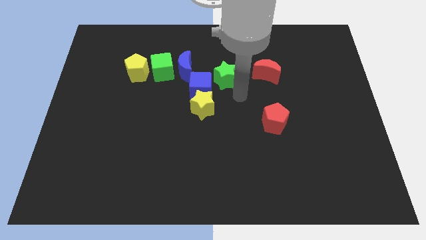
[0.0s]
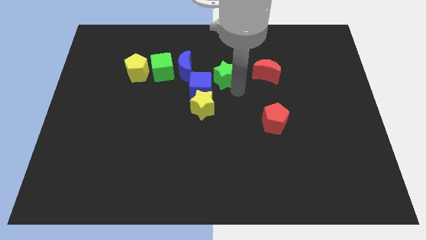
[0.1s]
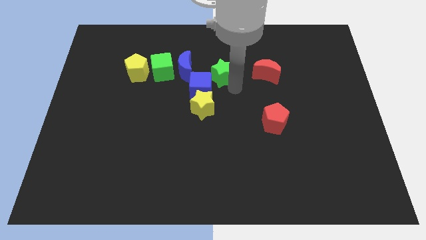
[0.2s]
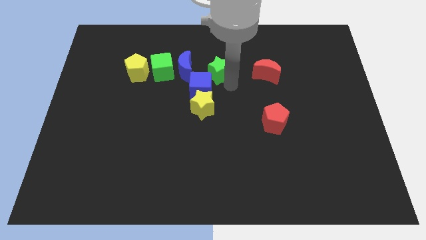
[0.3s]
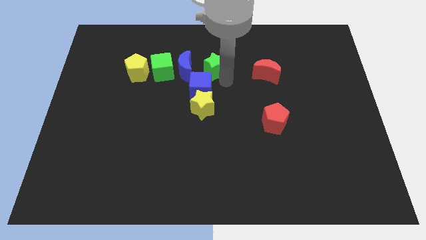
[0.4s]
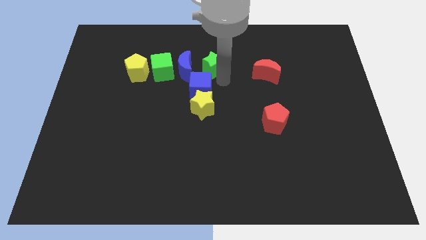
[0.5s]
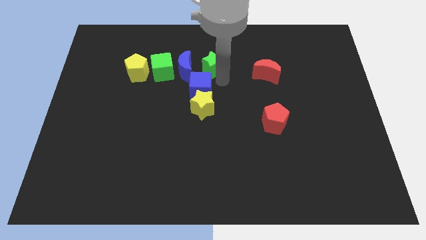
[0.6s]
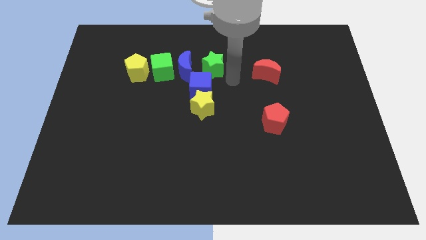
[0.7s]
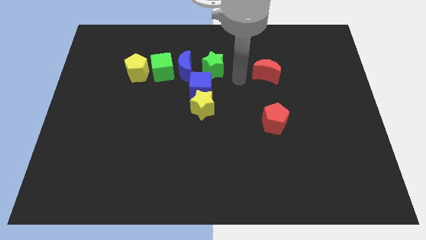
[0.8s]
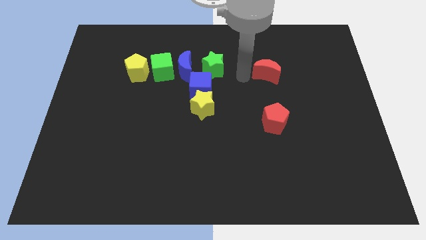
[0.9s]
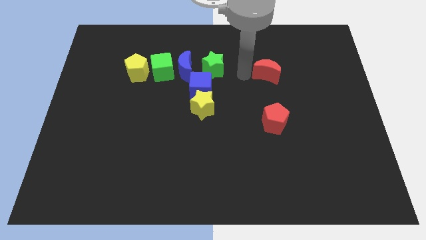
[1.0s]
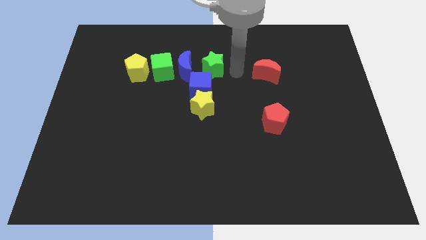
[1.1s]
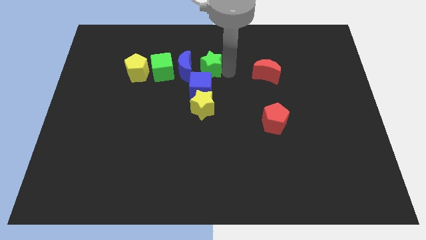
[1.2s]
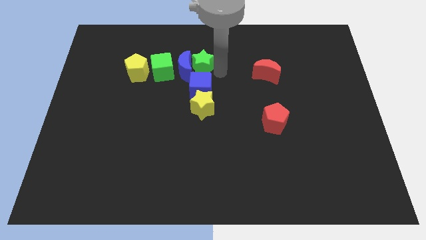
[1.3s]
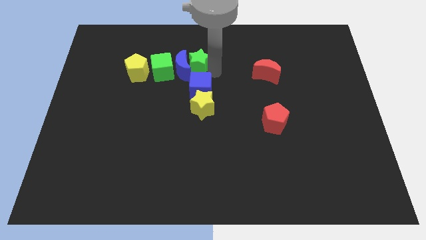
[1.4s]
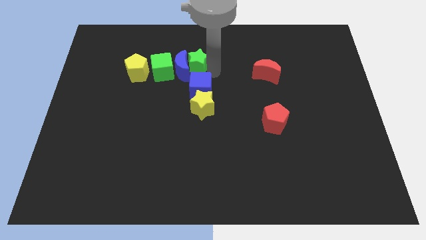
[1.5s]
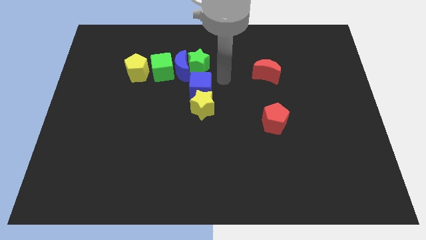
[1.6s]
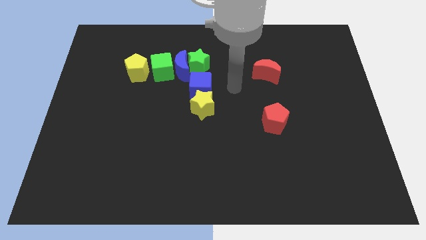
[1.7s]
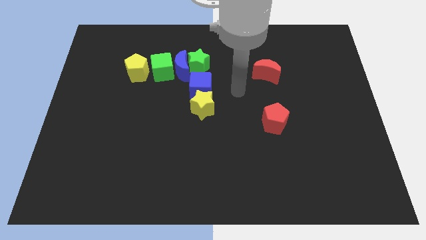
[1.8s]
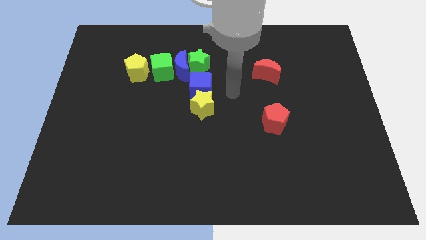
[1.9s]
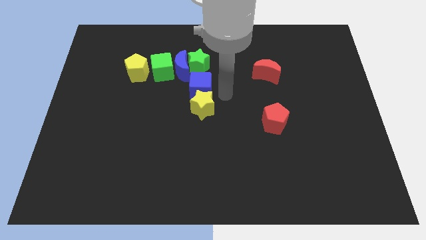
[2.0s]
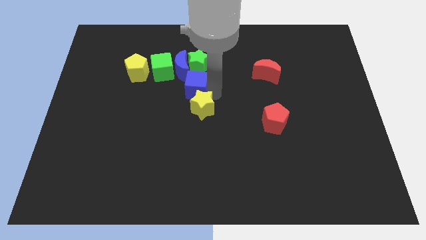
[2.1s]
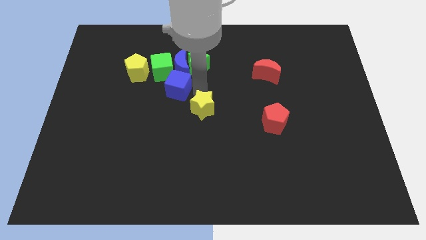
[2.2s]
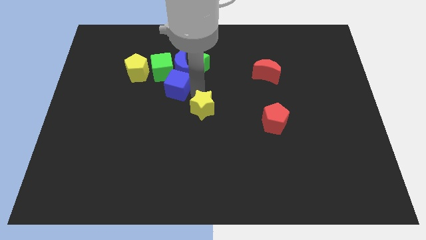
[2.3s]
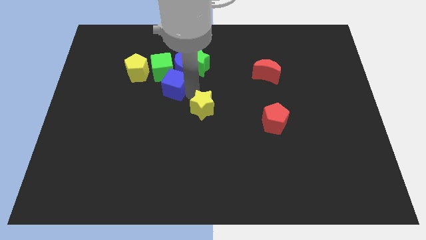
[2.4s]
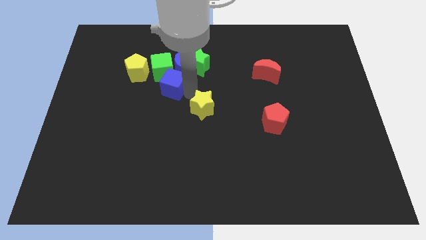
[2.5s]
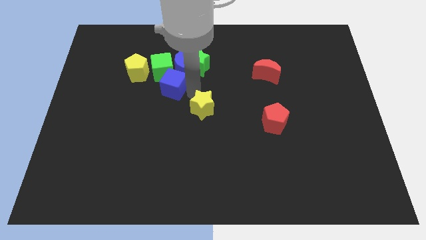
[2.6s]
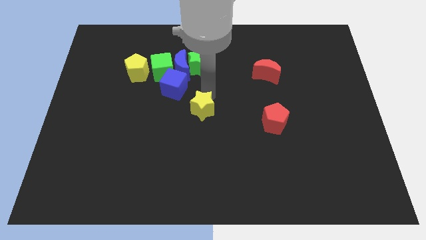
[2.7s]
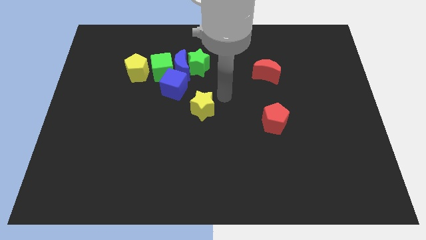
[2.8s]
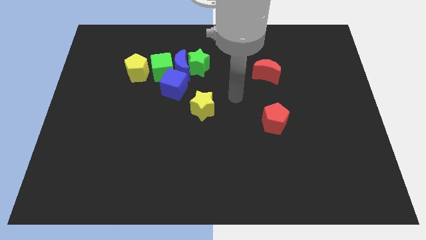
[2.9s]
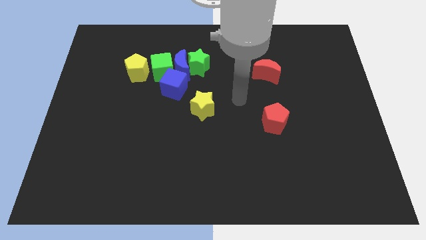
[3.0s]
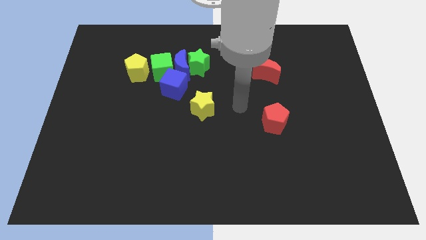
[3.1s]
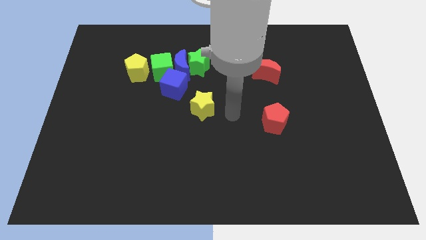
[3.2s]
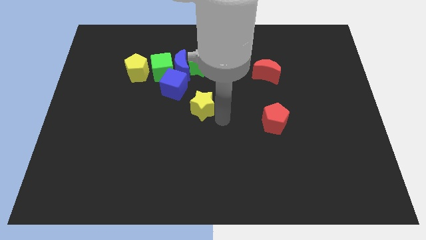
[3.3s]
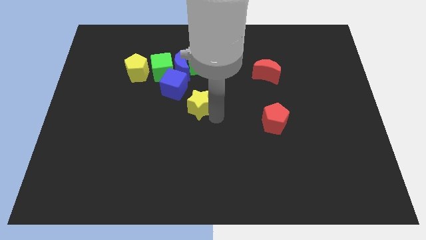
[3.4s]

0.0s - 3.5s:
push blue cube to the bottom of the green cube and blue crescent

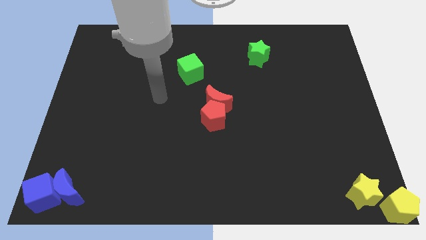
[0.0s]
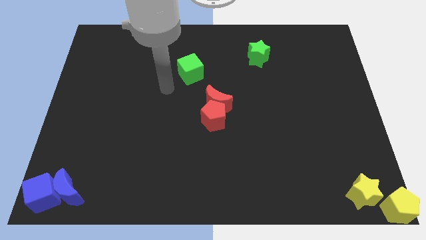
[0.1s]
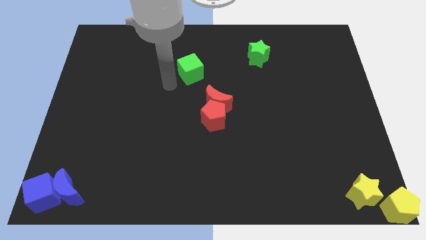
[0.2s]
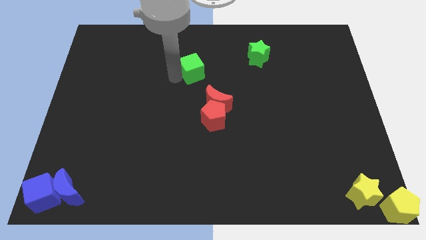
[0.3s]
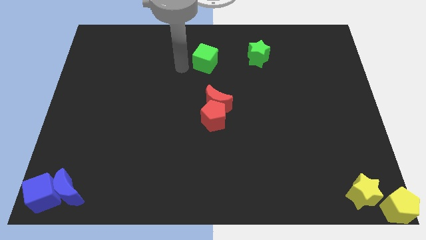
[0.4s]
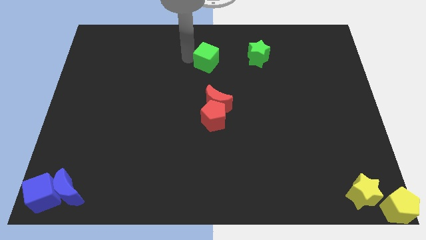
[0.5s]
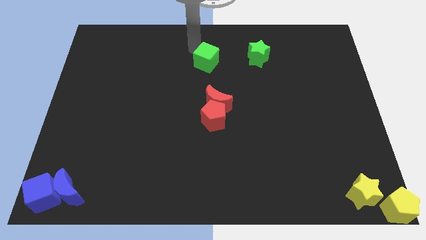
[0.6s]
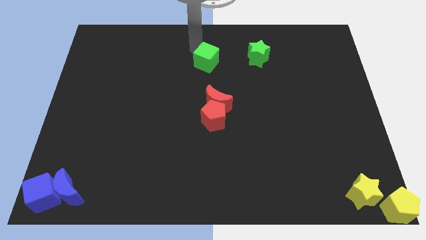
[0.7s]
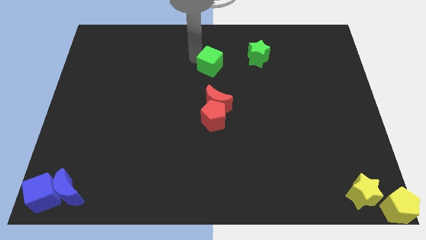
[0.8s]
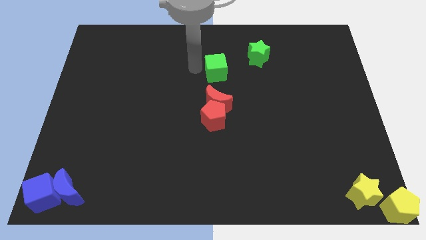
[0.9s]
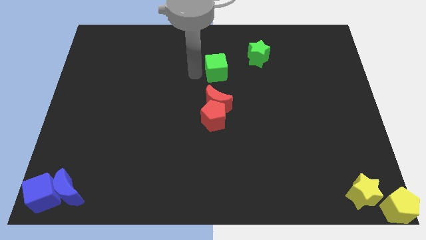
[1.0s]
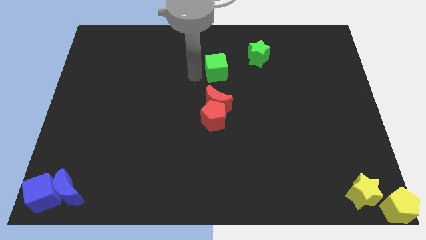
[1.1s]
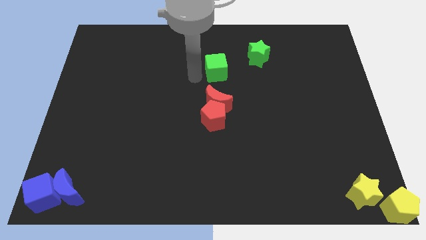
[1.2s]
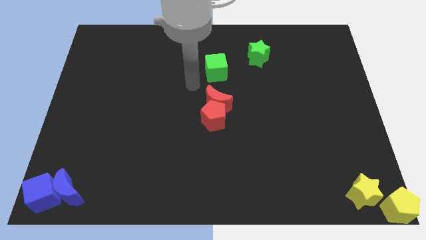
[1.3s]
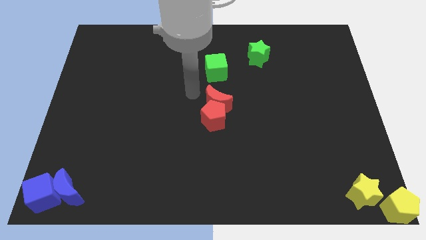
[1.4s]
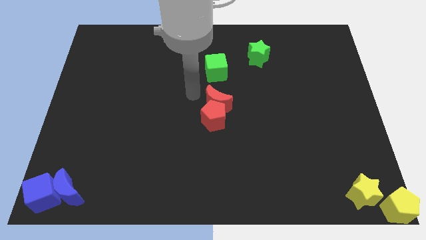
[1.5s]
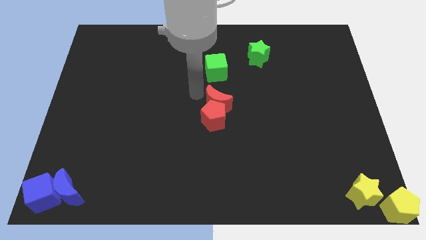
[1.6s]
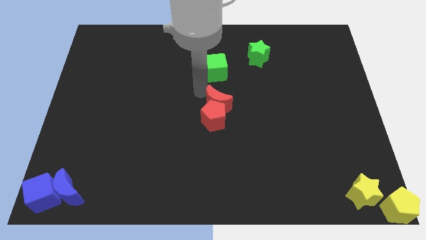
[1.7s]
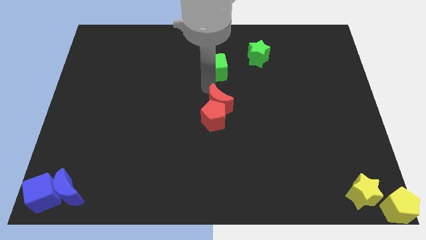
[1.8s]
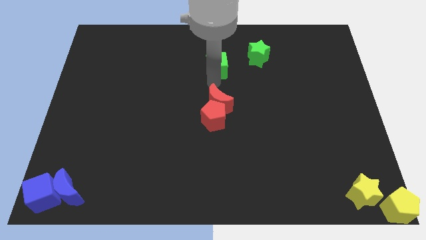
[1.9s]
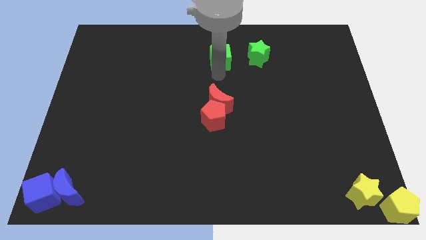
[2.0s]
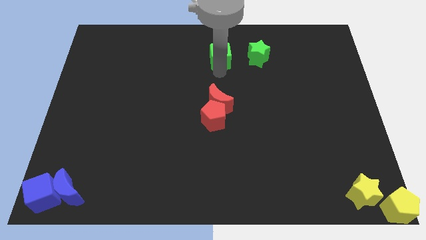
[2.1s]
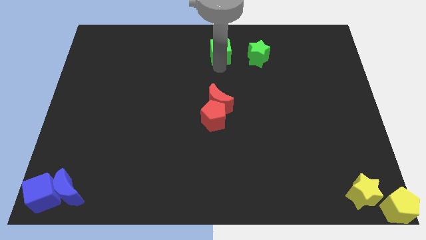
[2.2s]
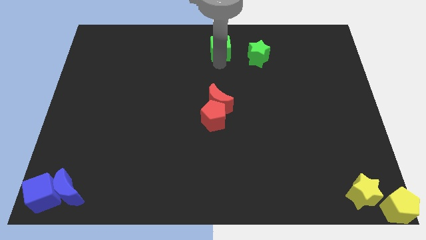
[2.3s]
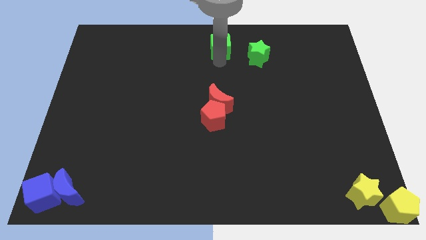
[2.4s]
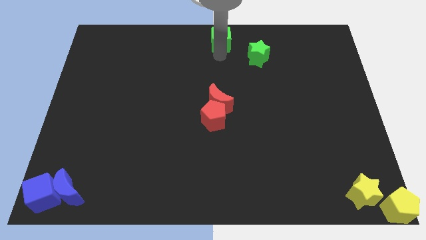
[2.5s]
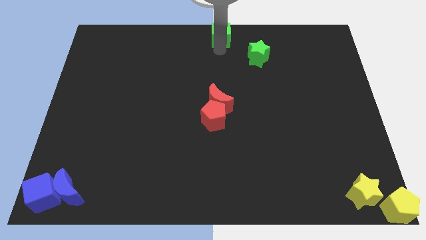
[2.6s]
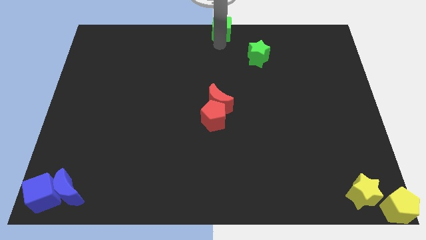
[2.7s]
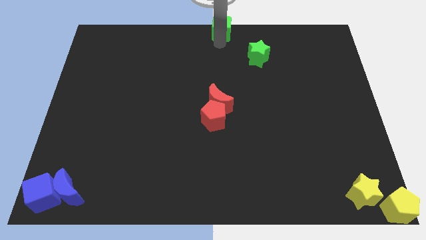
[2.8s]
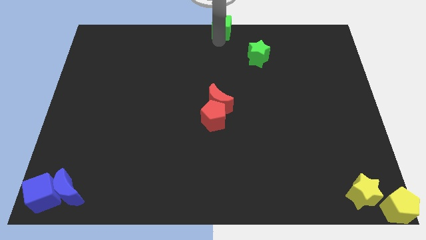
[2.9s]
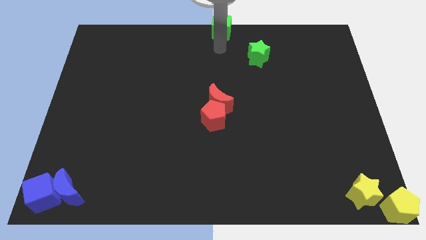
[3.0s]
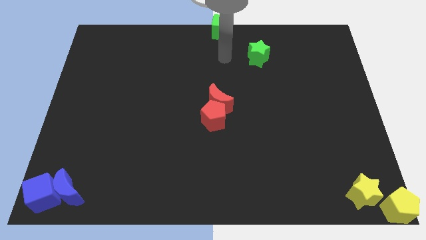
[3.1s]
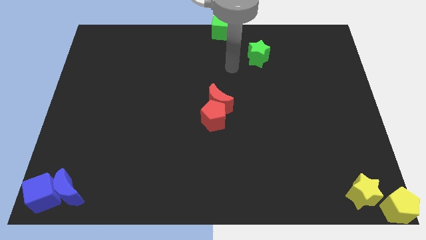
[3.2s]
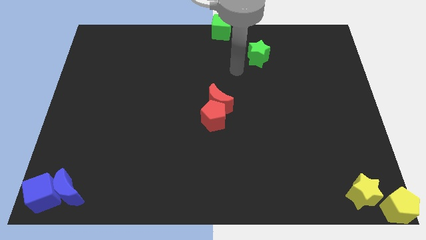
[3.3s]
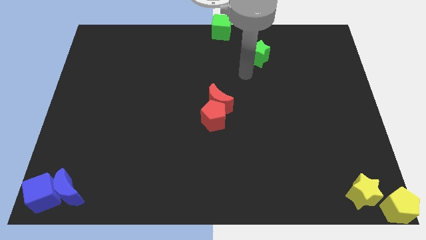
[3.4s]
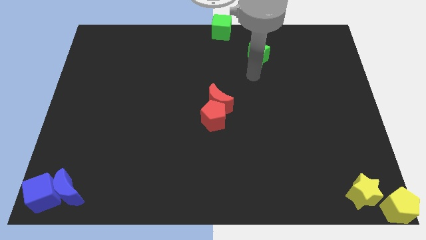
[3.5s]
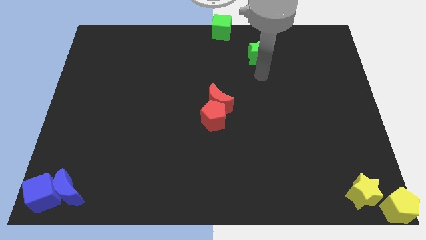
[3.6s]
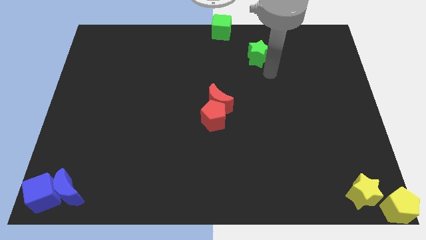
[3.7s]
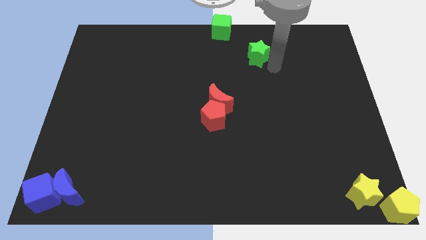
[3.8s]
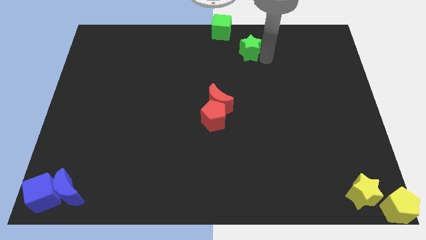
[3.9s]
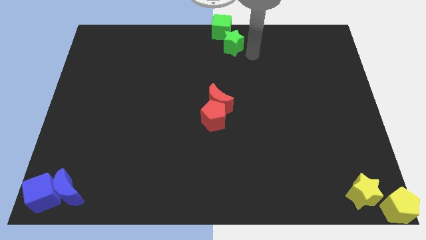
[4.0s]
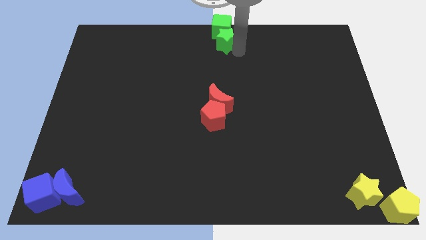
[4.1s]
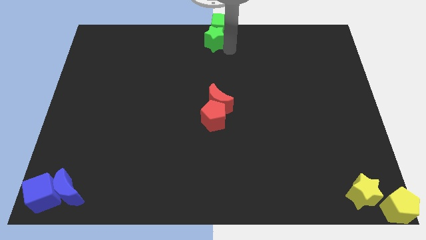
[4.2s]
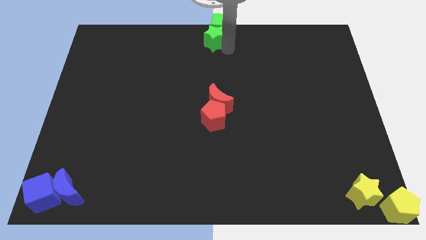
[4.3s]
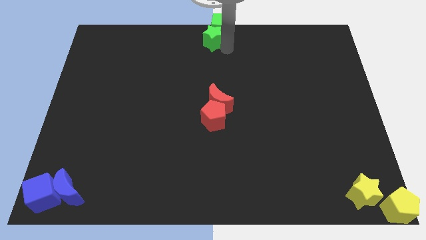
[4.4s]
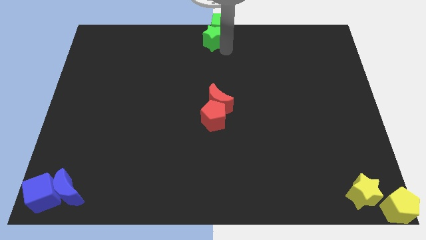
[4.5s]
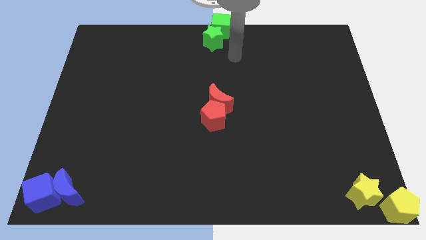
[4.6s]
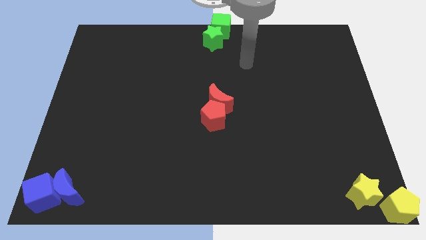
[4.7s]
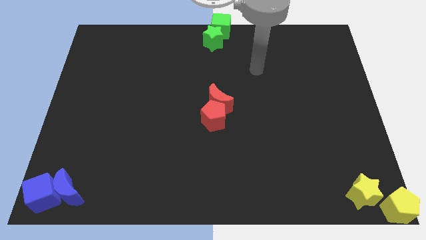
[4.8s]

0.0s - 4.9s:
place the green blocks to the top center

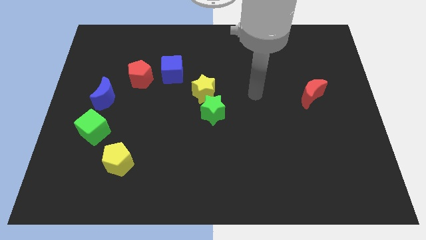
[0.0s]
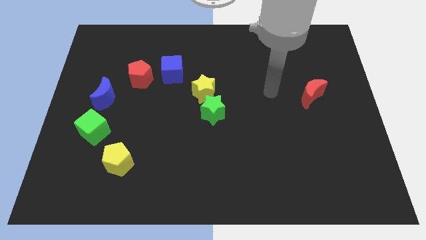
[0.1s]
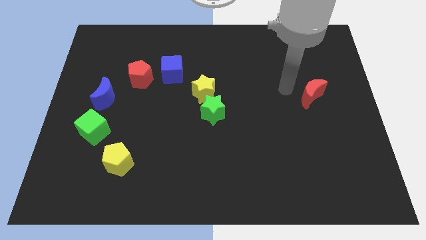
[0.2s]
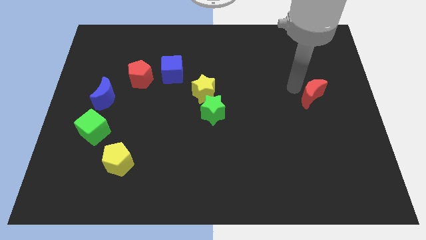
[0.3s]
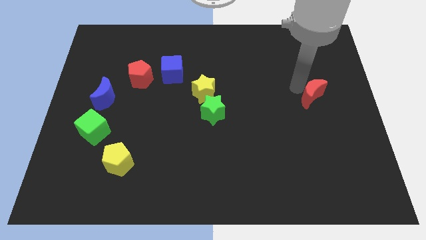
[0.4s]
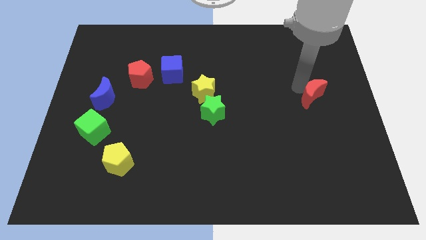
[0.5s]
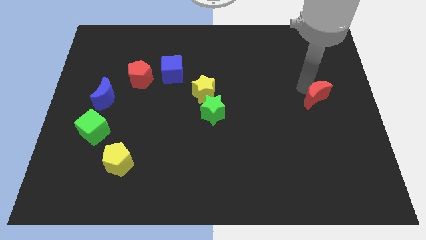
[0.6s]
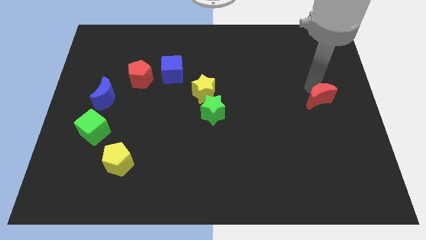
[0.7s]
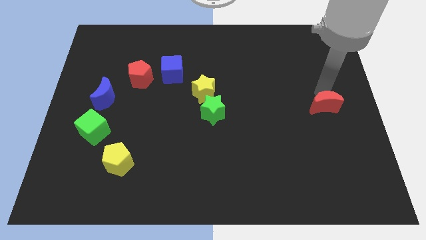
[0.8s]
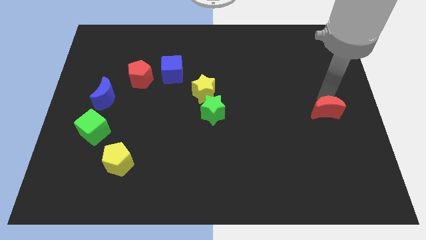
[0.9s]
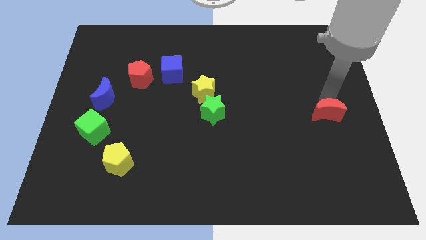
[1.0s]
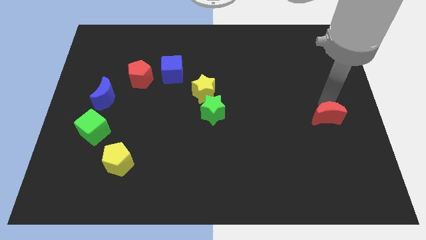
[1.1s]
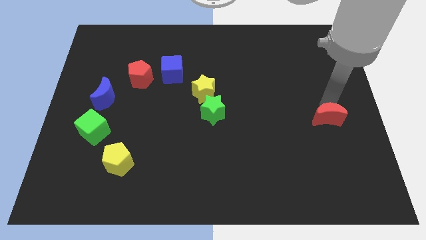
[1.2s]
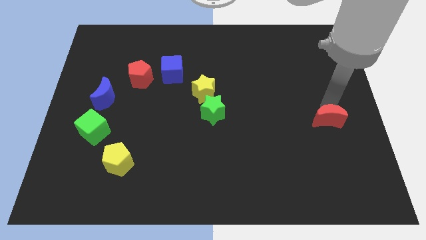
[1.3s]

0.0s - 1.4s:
push the red crescent to the bottom of the board
